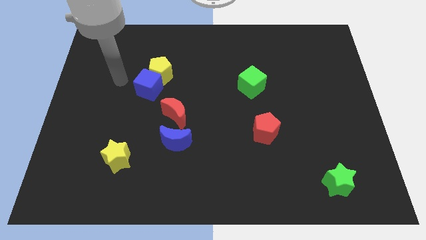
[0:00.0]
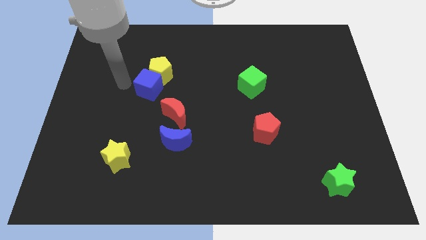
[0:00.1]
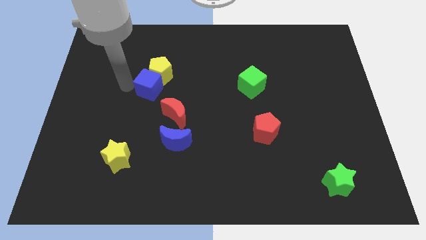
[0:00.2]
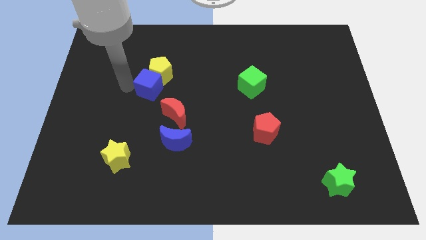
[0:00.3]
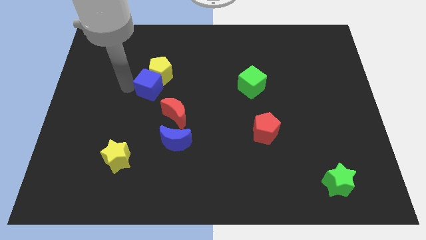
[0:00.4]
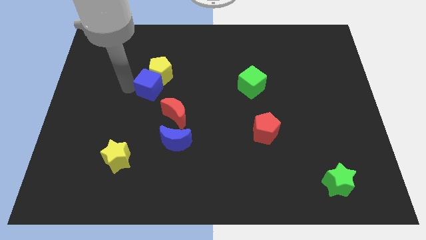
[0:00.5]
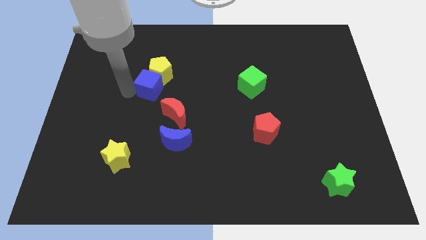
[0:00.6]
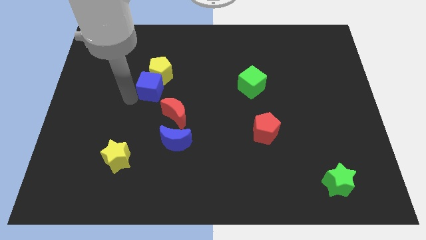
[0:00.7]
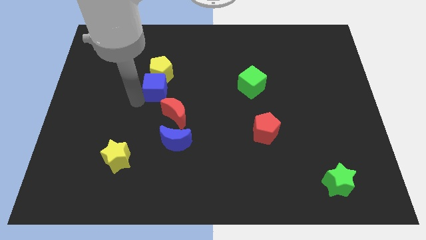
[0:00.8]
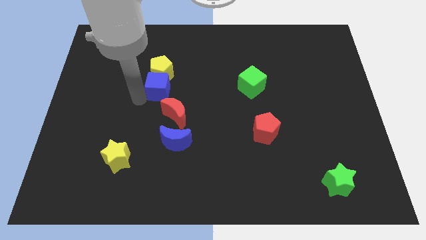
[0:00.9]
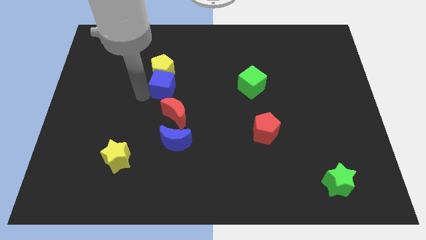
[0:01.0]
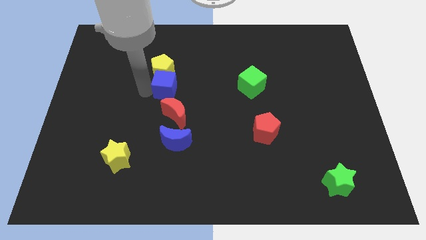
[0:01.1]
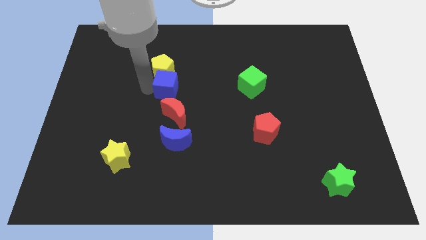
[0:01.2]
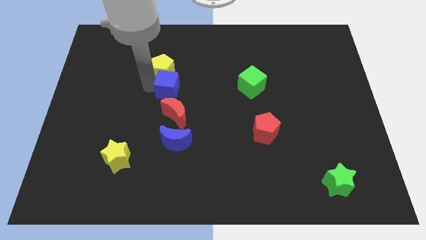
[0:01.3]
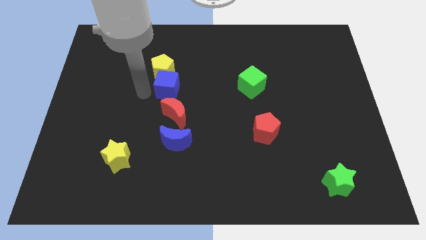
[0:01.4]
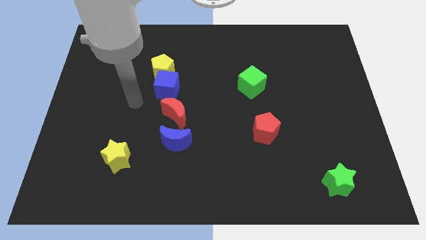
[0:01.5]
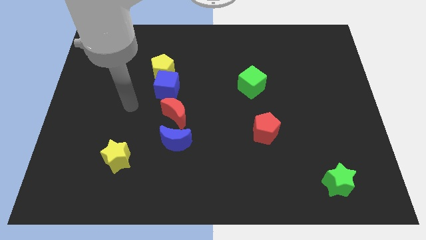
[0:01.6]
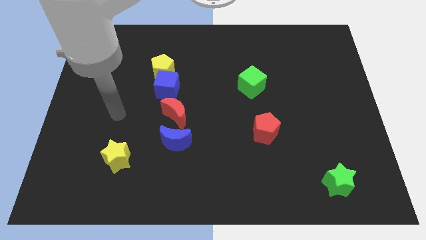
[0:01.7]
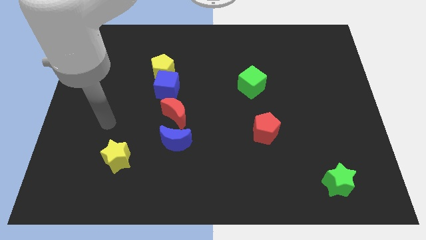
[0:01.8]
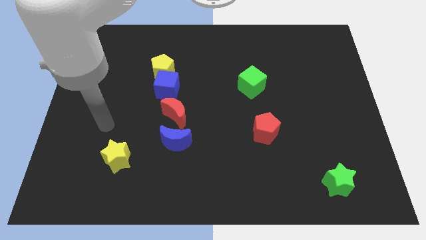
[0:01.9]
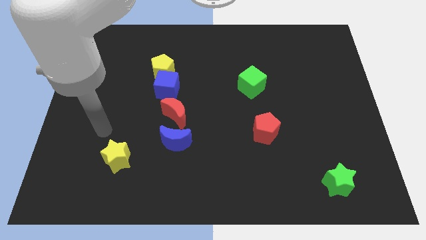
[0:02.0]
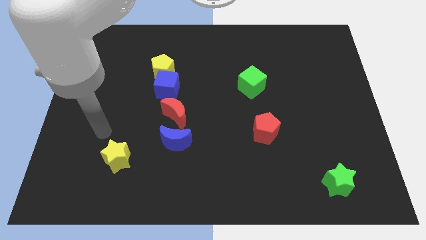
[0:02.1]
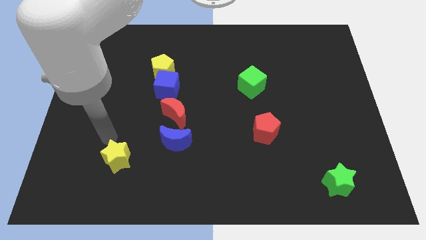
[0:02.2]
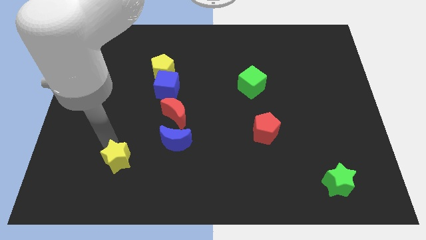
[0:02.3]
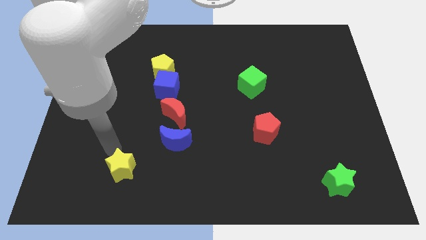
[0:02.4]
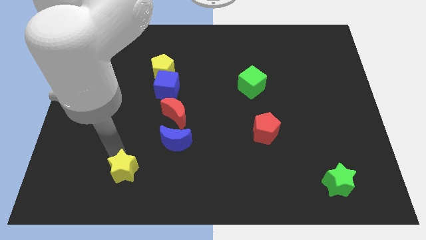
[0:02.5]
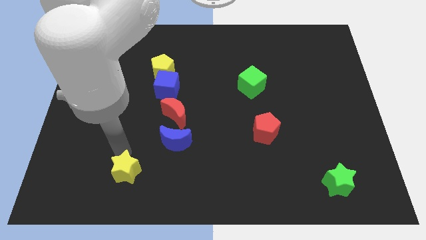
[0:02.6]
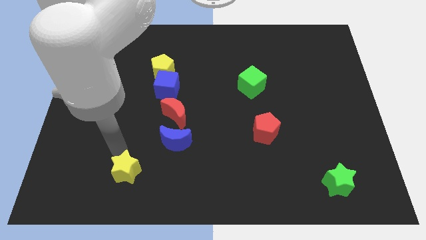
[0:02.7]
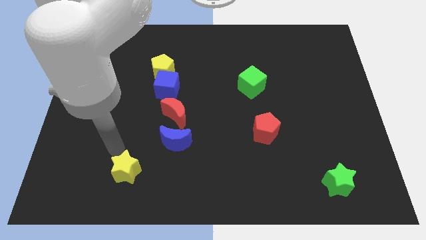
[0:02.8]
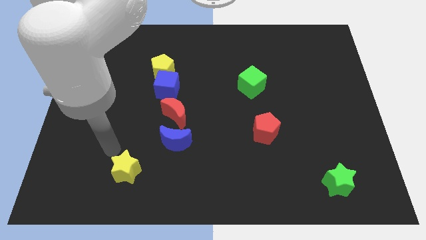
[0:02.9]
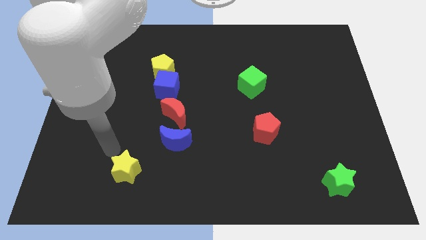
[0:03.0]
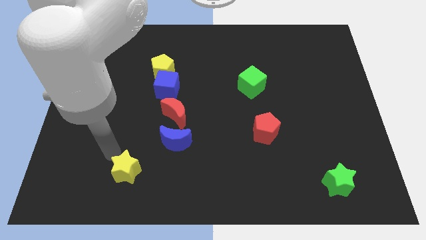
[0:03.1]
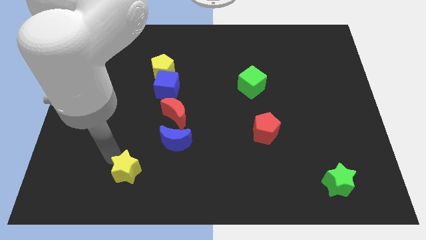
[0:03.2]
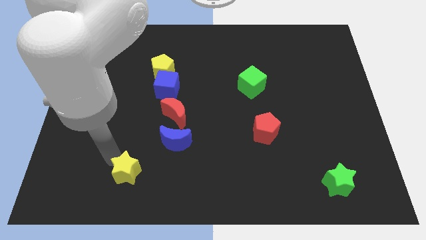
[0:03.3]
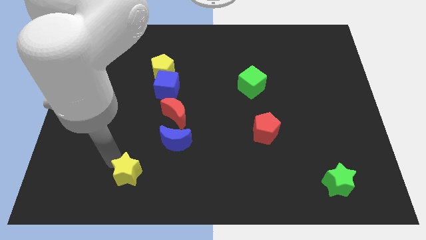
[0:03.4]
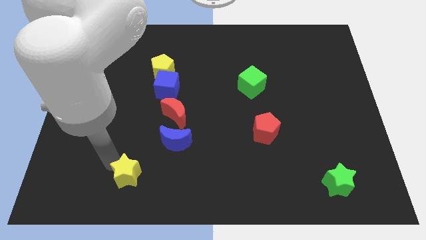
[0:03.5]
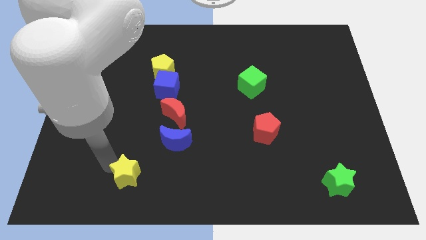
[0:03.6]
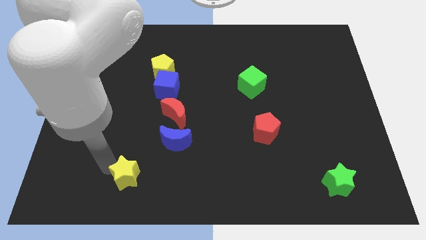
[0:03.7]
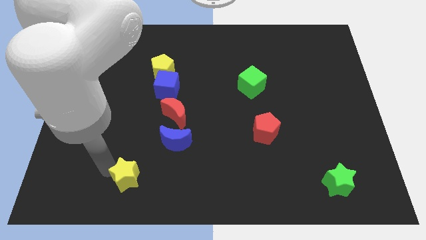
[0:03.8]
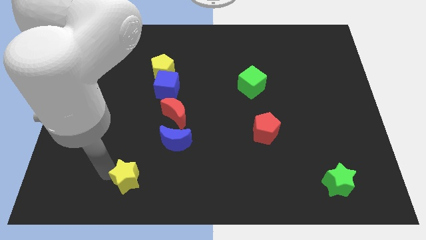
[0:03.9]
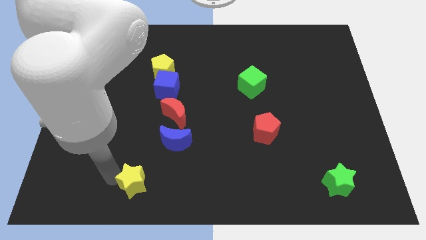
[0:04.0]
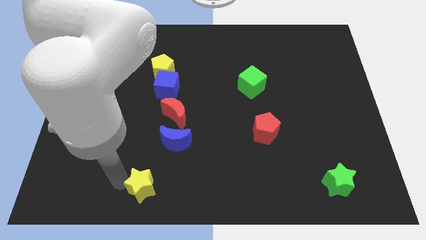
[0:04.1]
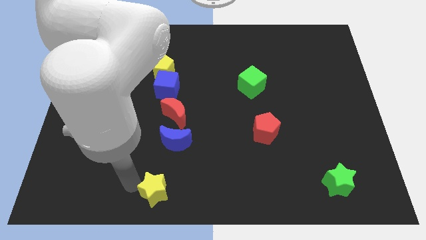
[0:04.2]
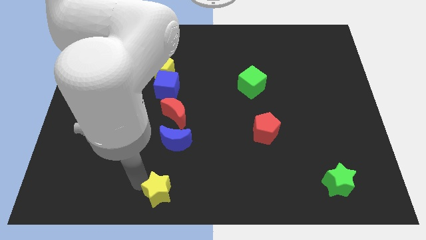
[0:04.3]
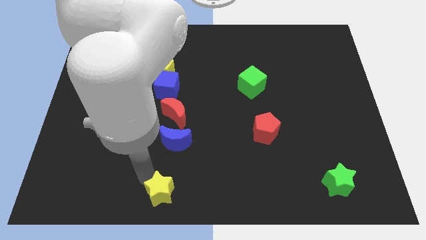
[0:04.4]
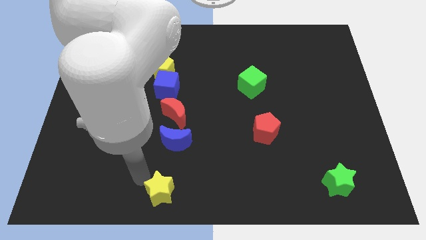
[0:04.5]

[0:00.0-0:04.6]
place the yellow star below the blue semicircle

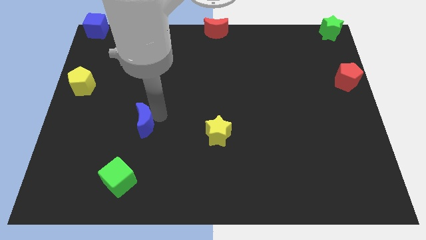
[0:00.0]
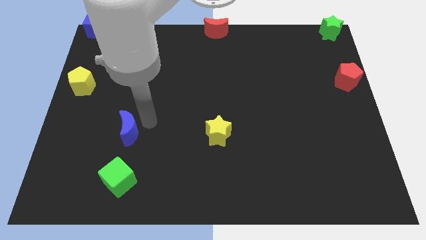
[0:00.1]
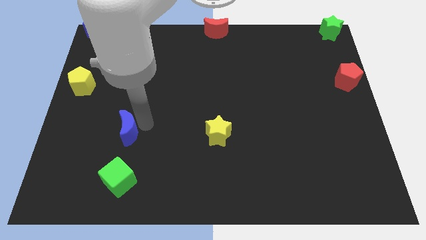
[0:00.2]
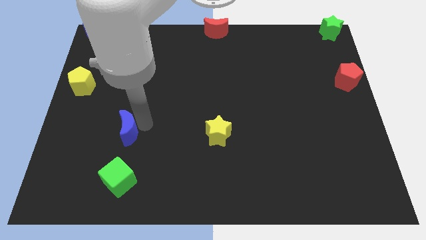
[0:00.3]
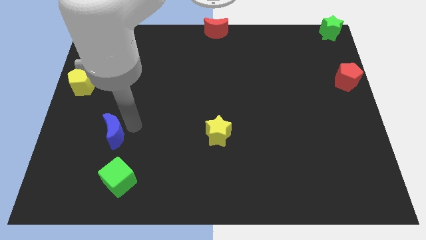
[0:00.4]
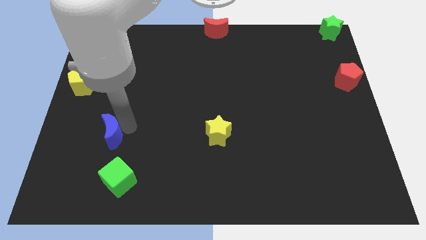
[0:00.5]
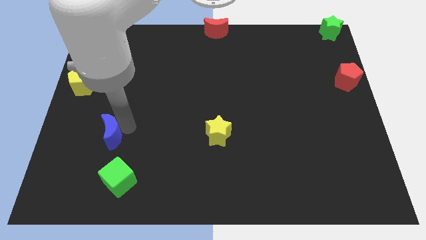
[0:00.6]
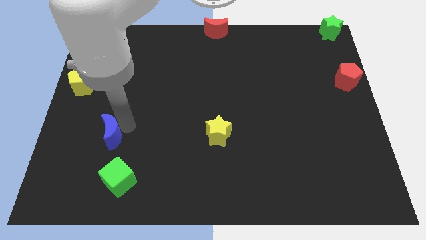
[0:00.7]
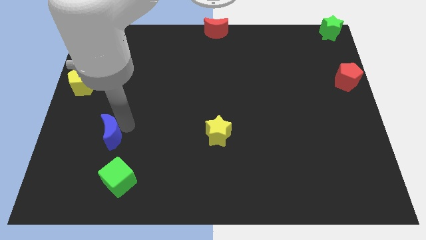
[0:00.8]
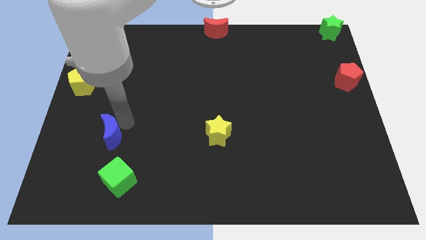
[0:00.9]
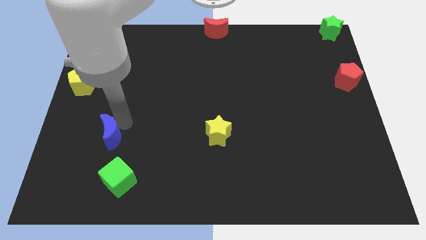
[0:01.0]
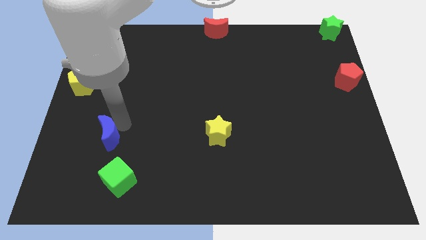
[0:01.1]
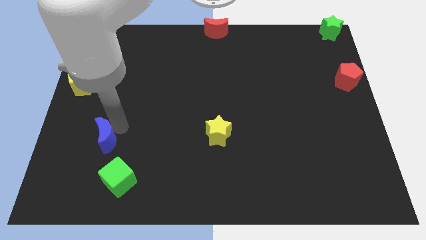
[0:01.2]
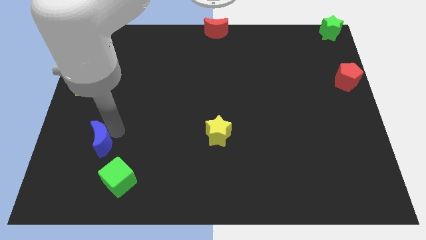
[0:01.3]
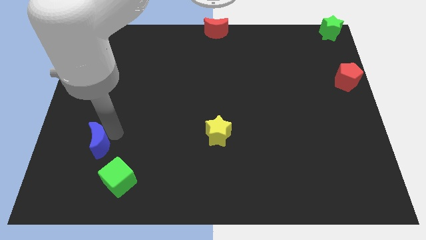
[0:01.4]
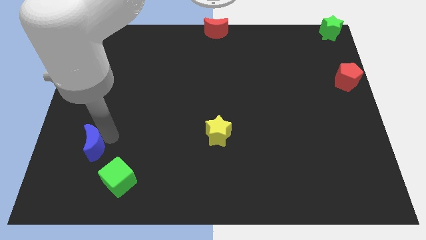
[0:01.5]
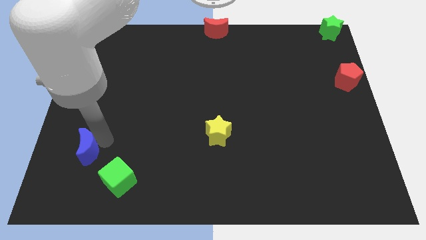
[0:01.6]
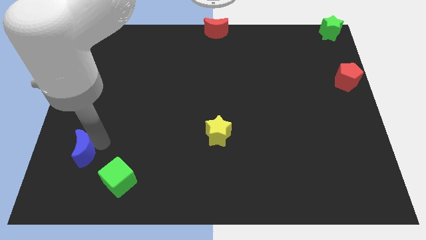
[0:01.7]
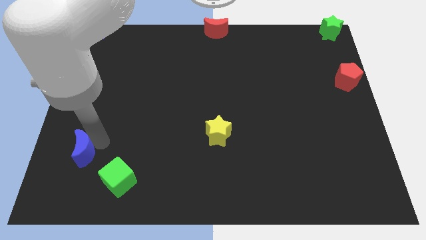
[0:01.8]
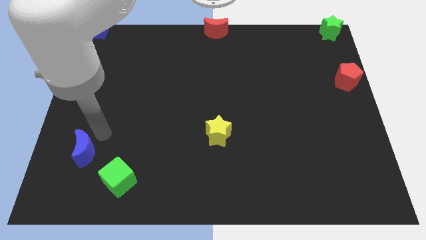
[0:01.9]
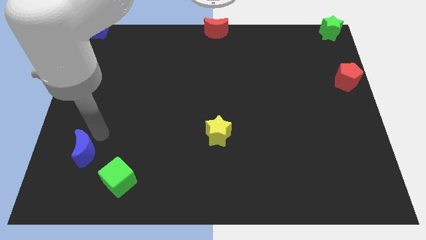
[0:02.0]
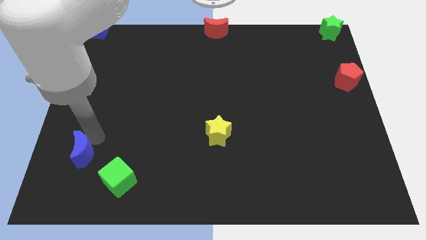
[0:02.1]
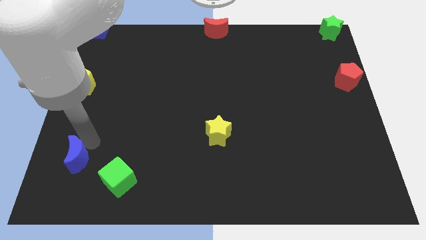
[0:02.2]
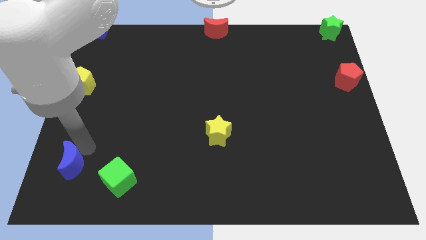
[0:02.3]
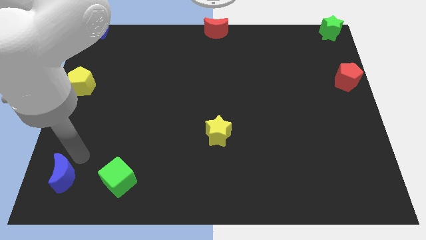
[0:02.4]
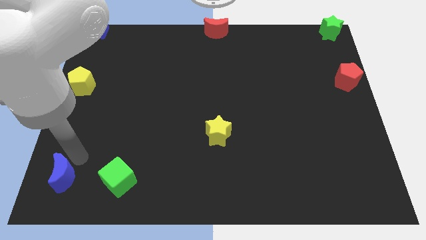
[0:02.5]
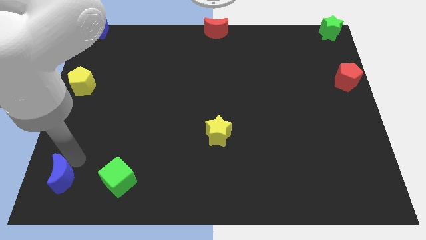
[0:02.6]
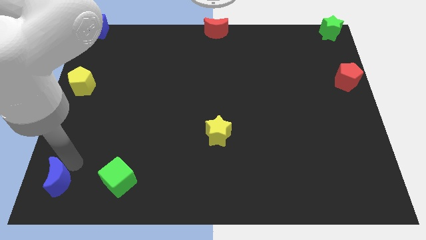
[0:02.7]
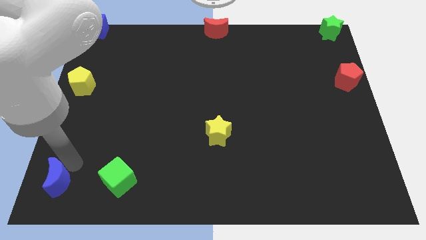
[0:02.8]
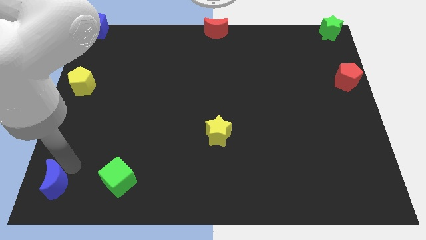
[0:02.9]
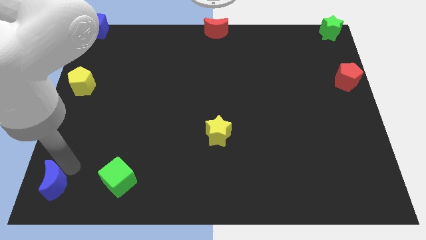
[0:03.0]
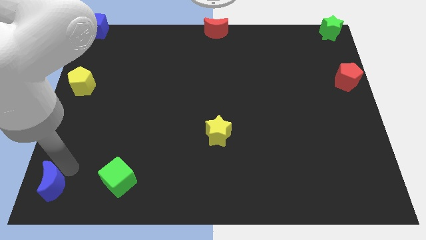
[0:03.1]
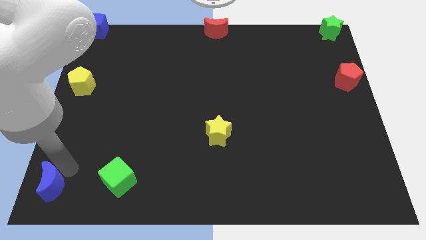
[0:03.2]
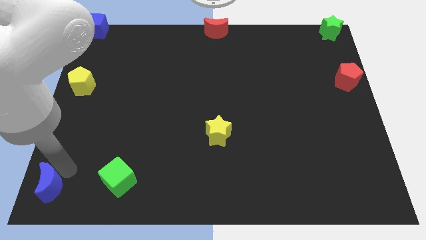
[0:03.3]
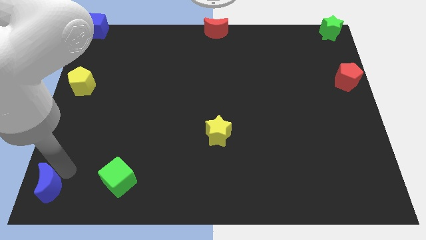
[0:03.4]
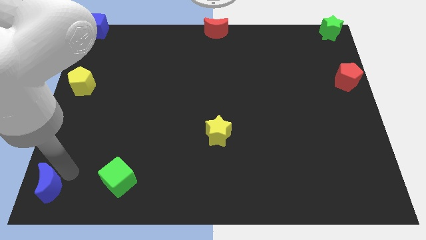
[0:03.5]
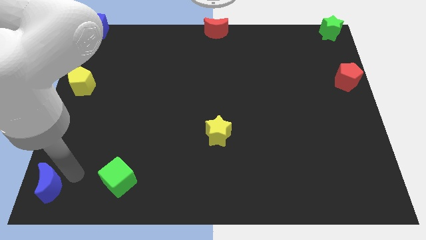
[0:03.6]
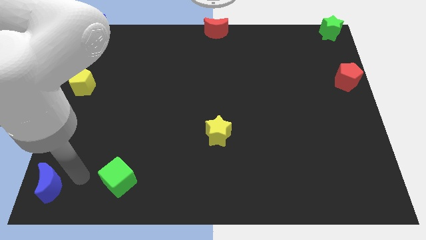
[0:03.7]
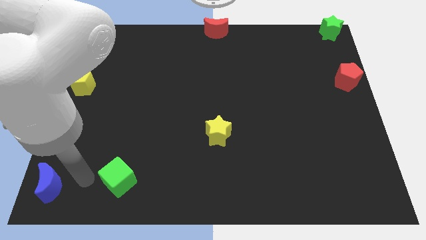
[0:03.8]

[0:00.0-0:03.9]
put the blue moon to the bottom left corner of the board

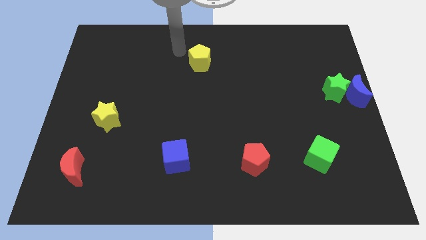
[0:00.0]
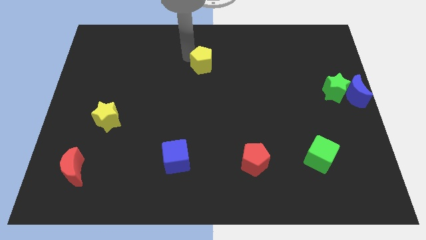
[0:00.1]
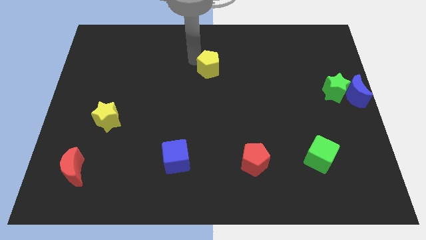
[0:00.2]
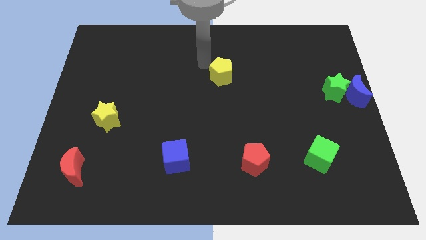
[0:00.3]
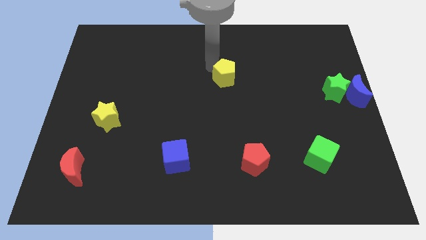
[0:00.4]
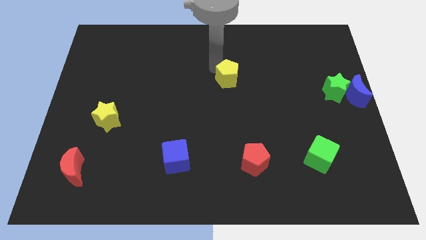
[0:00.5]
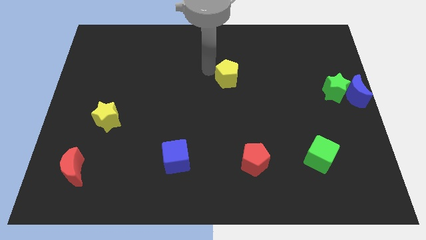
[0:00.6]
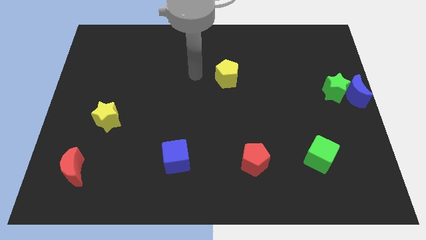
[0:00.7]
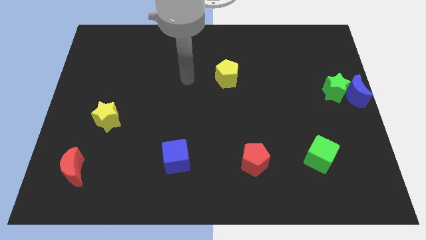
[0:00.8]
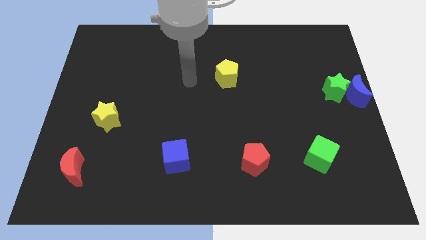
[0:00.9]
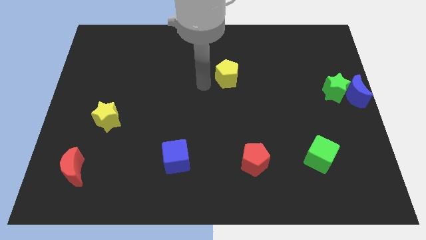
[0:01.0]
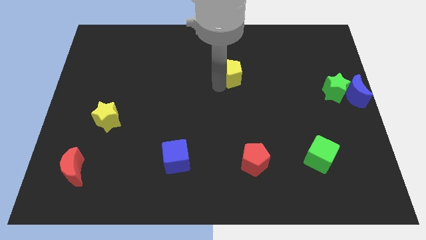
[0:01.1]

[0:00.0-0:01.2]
move the yellow pentagon slightly towards the center of the board
